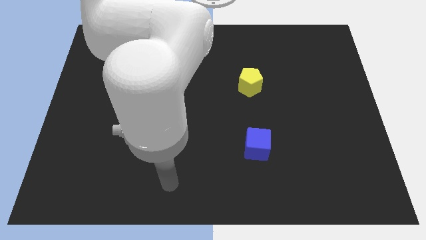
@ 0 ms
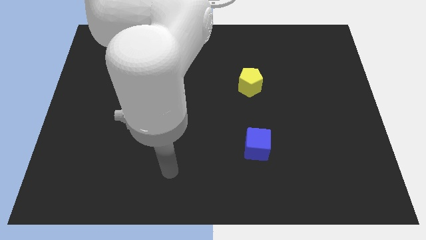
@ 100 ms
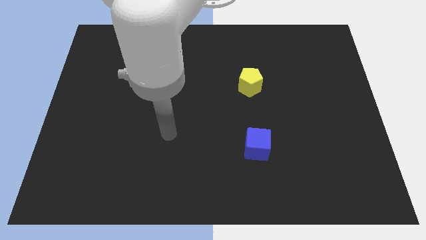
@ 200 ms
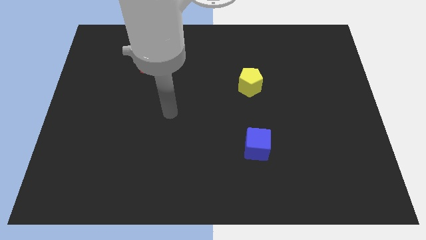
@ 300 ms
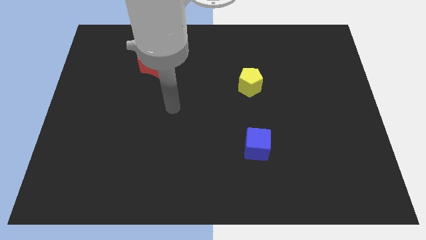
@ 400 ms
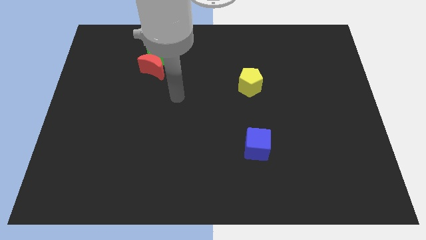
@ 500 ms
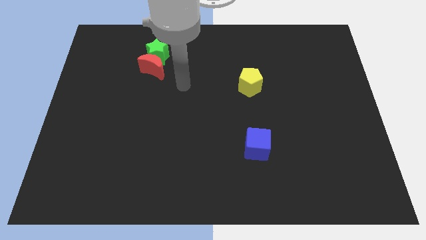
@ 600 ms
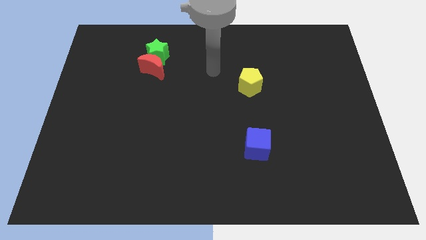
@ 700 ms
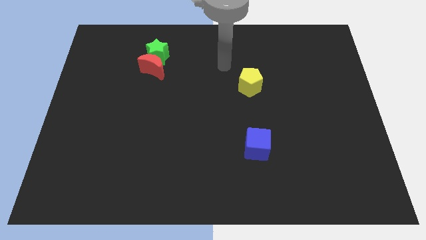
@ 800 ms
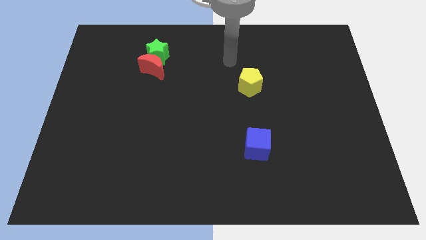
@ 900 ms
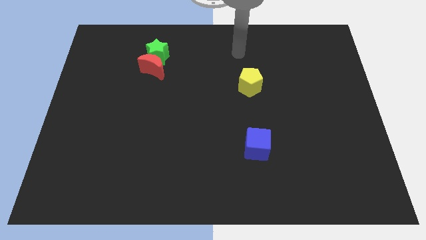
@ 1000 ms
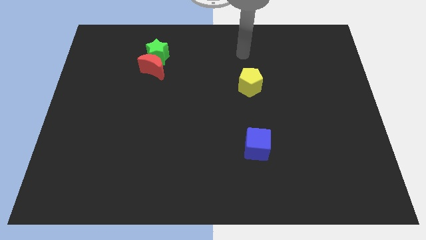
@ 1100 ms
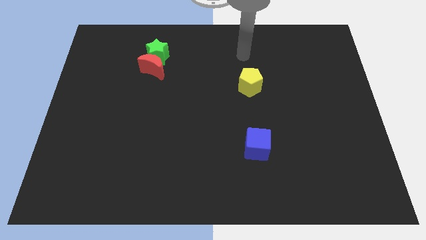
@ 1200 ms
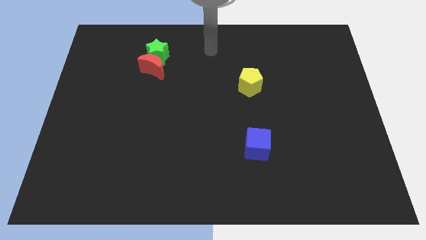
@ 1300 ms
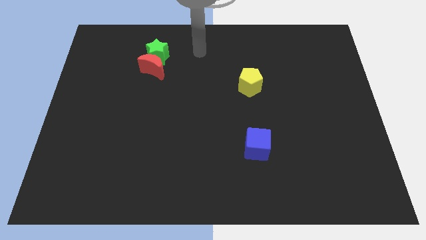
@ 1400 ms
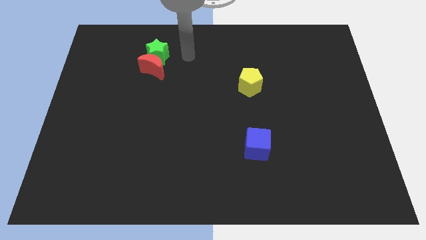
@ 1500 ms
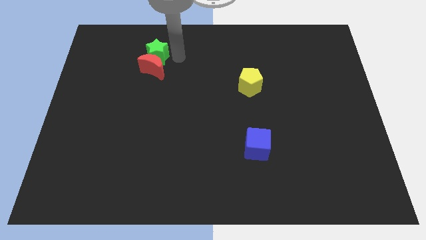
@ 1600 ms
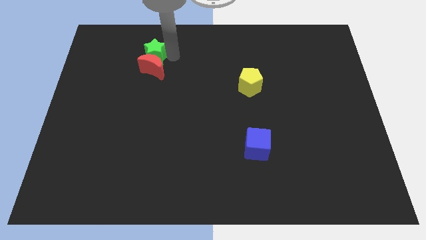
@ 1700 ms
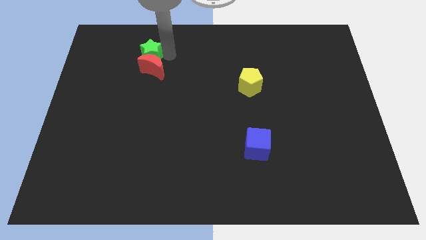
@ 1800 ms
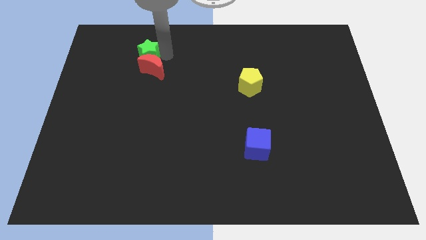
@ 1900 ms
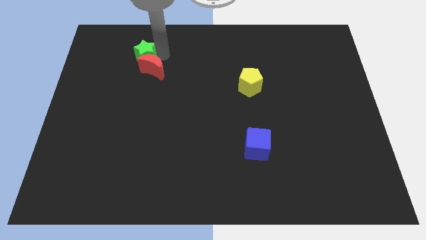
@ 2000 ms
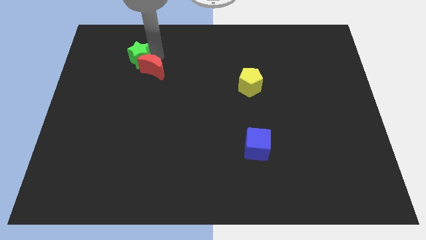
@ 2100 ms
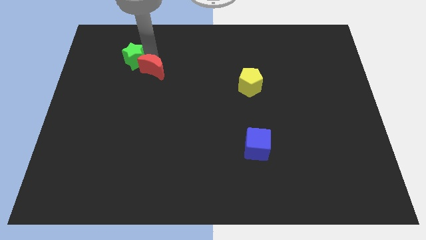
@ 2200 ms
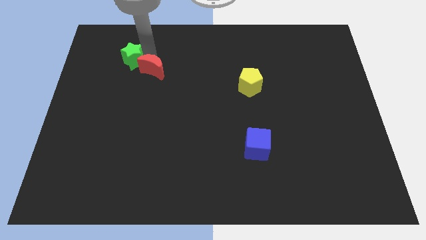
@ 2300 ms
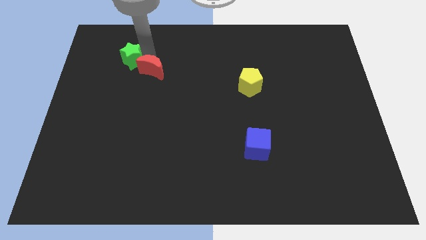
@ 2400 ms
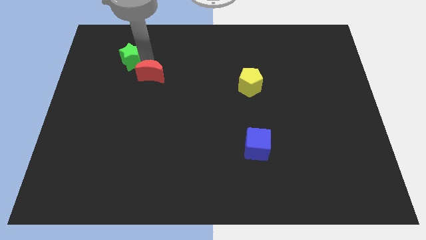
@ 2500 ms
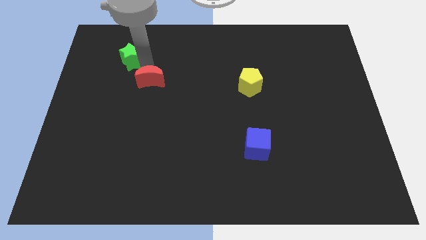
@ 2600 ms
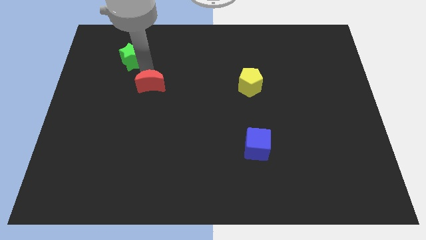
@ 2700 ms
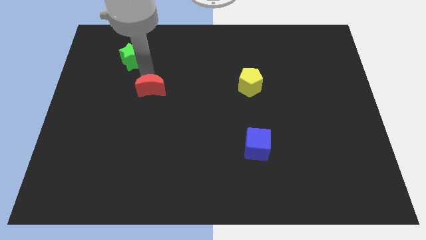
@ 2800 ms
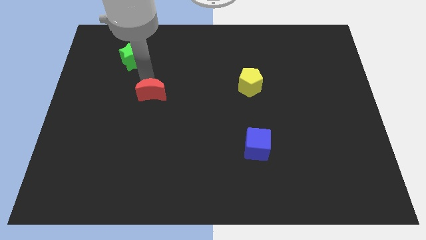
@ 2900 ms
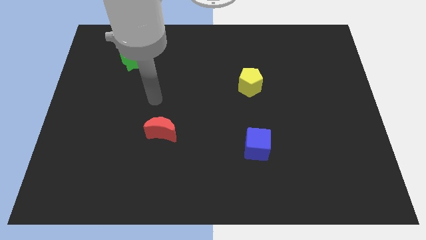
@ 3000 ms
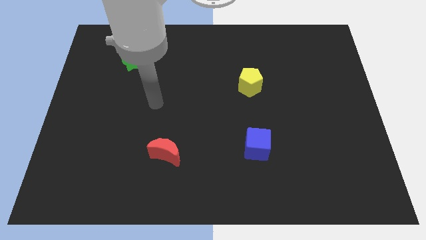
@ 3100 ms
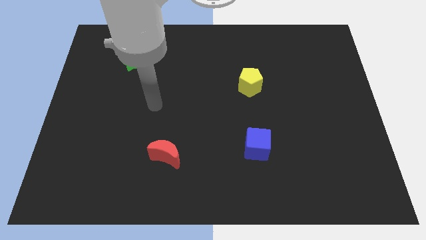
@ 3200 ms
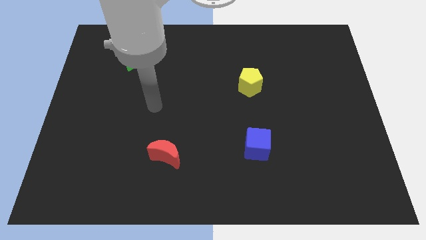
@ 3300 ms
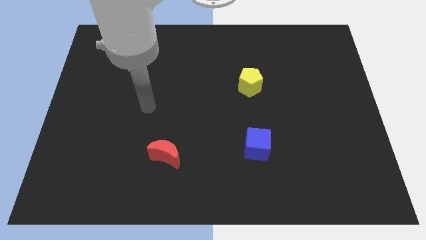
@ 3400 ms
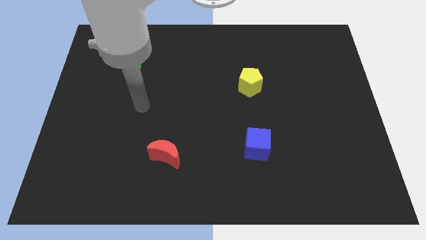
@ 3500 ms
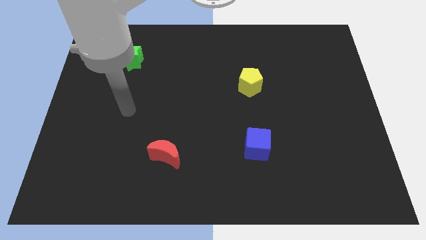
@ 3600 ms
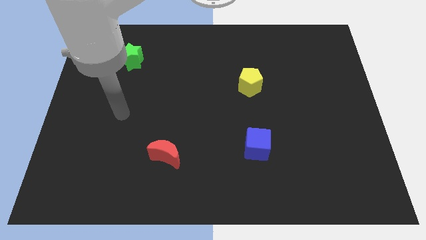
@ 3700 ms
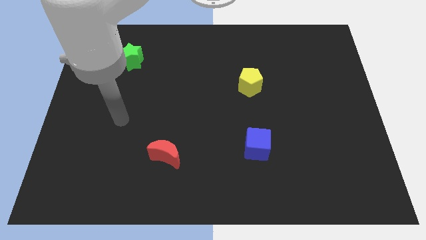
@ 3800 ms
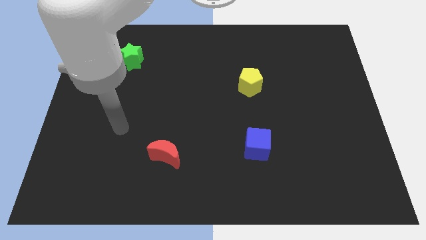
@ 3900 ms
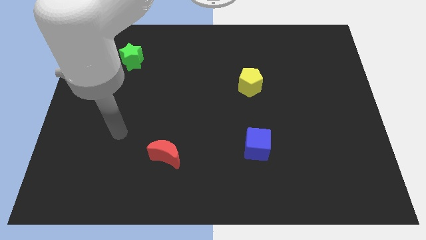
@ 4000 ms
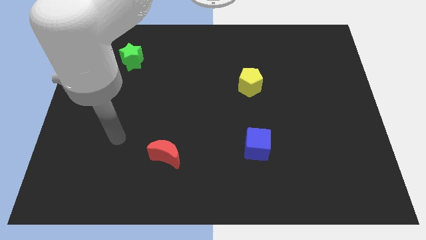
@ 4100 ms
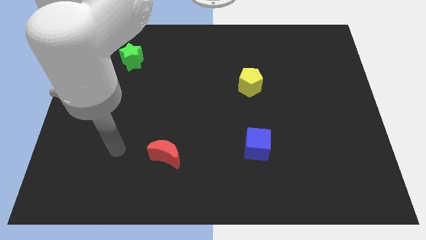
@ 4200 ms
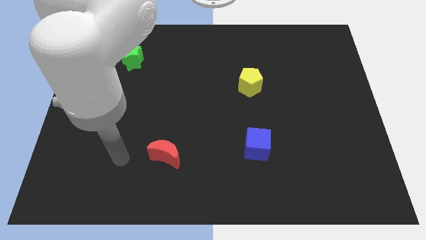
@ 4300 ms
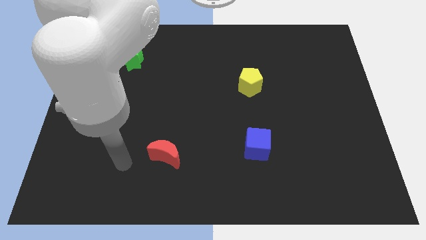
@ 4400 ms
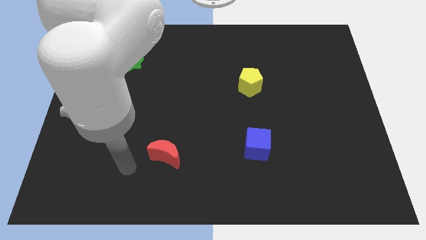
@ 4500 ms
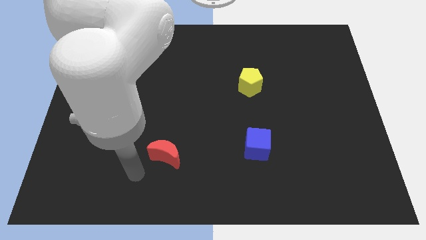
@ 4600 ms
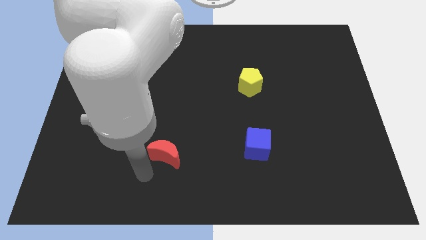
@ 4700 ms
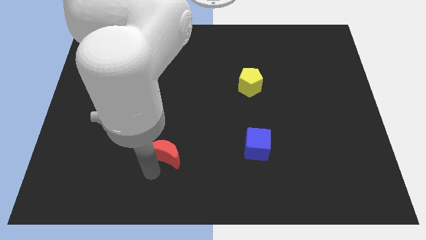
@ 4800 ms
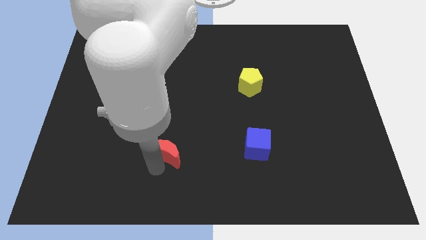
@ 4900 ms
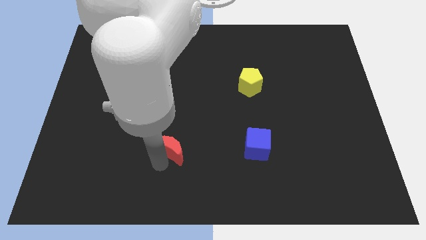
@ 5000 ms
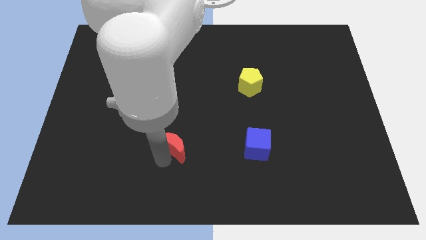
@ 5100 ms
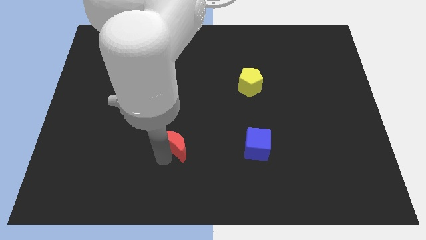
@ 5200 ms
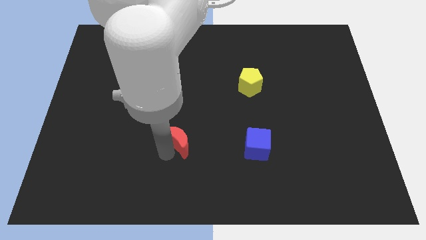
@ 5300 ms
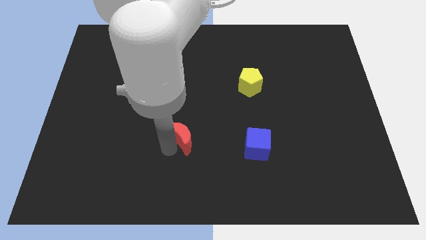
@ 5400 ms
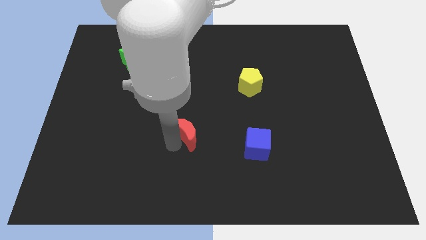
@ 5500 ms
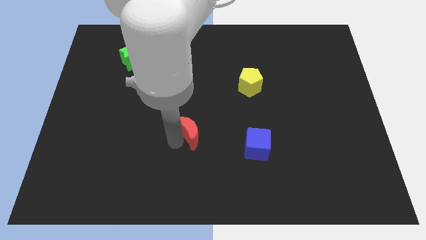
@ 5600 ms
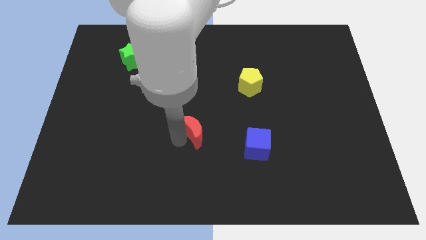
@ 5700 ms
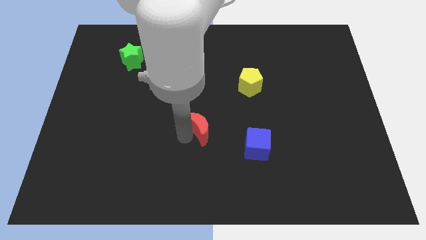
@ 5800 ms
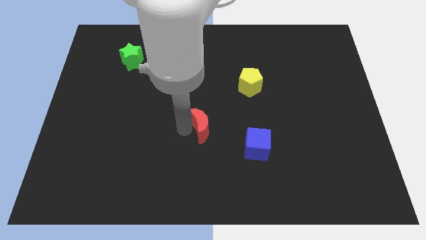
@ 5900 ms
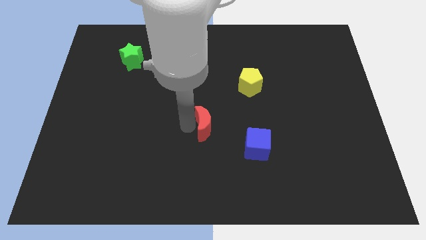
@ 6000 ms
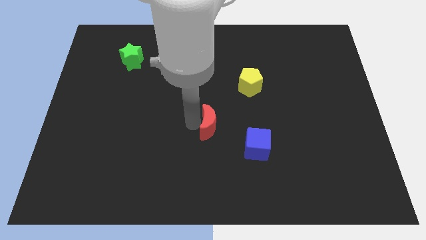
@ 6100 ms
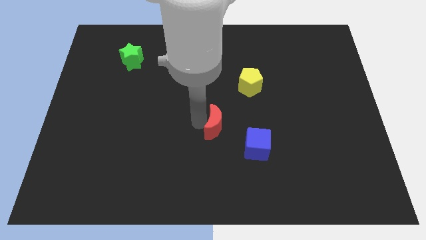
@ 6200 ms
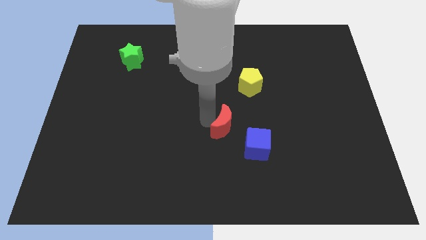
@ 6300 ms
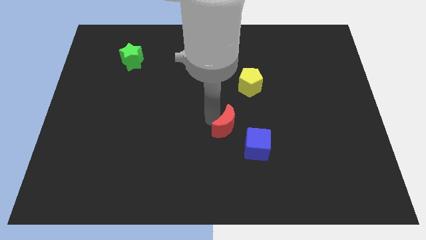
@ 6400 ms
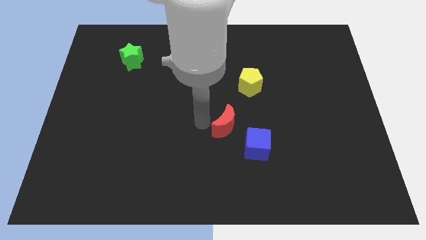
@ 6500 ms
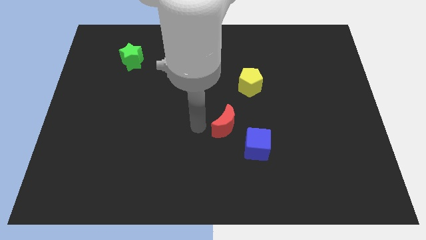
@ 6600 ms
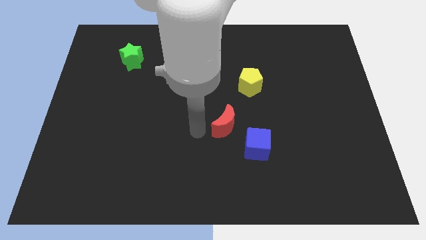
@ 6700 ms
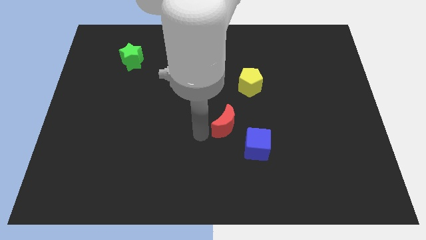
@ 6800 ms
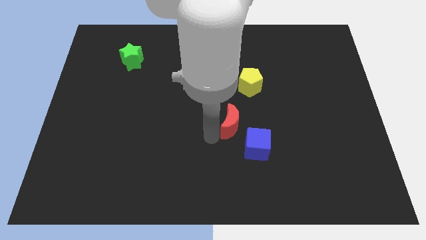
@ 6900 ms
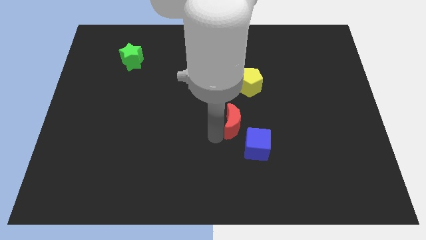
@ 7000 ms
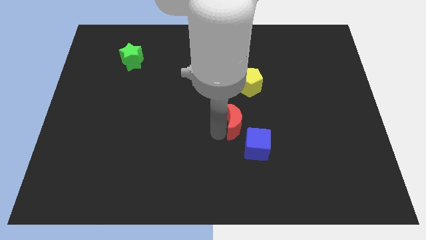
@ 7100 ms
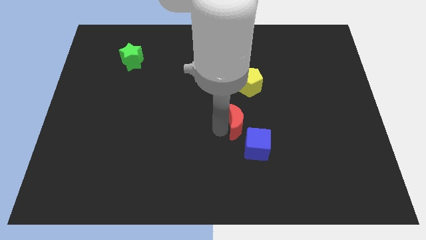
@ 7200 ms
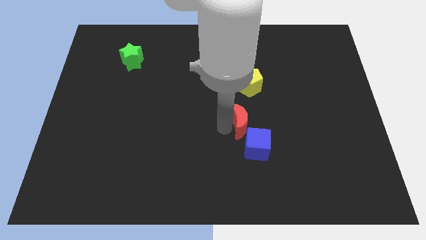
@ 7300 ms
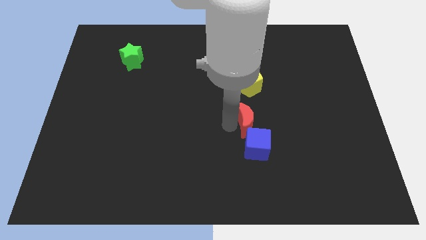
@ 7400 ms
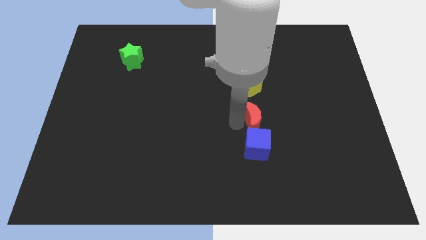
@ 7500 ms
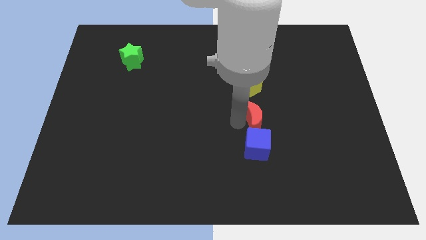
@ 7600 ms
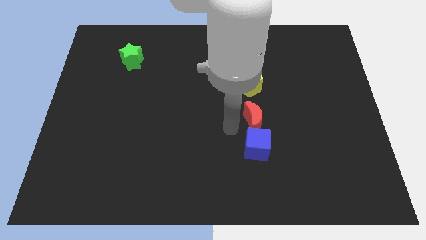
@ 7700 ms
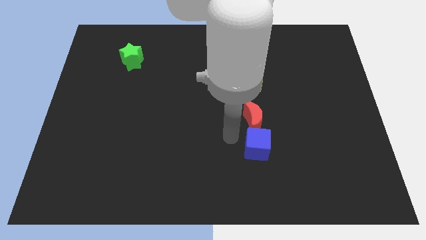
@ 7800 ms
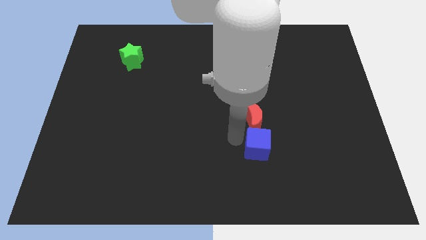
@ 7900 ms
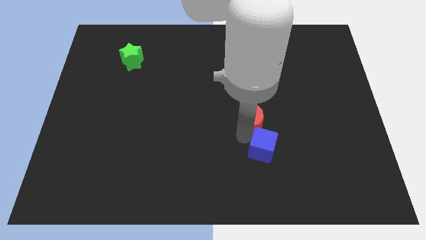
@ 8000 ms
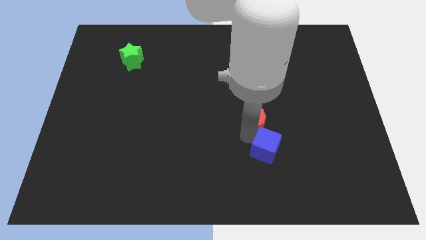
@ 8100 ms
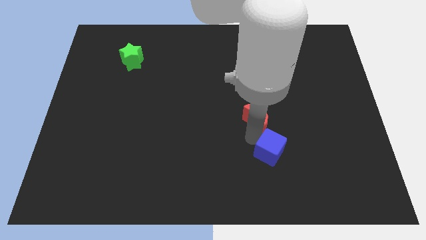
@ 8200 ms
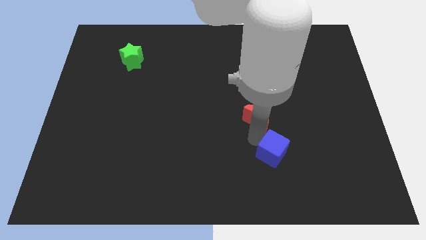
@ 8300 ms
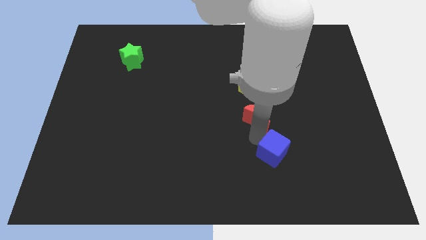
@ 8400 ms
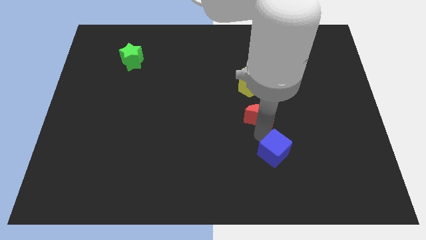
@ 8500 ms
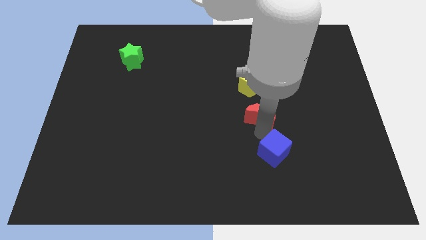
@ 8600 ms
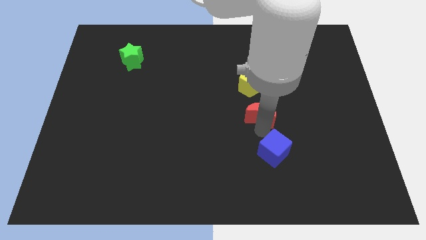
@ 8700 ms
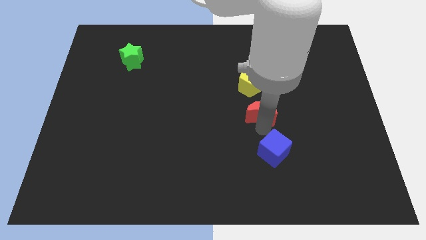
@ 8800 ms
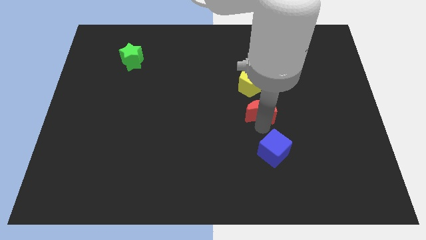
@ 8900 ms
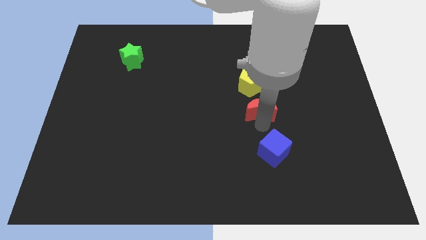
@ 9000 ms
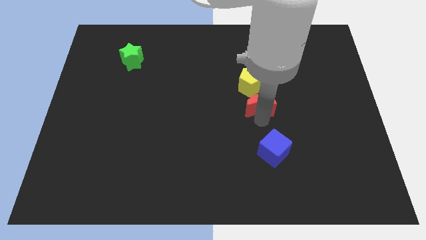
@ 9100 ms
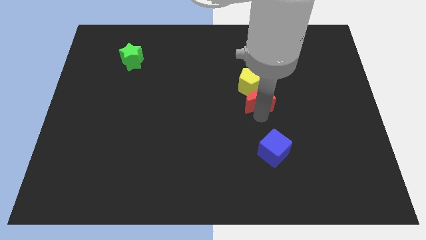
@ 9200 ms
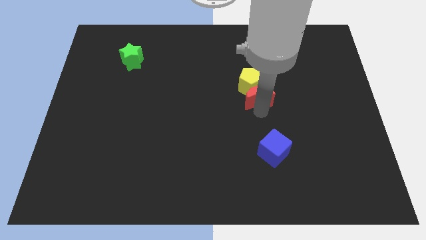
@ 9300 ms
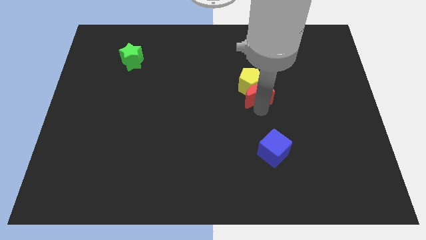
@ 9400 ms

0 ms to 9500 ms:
put the red moon towards the yellow pentagon
